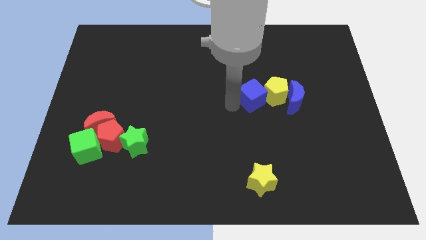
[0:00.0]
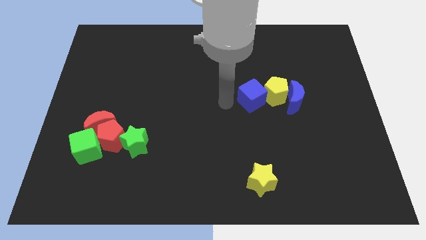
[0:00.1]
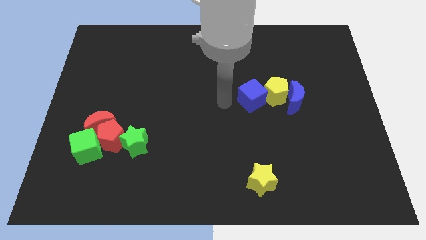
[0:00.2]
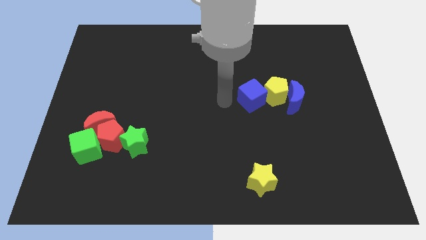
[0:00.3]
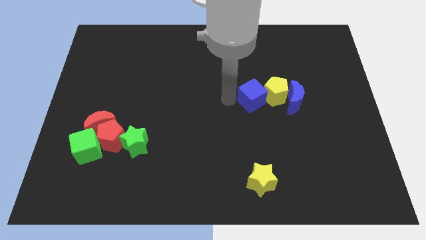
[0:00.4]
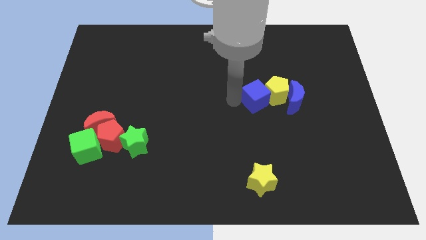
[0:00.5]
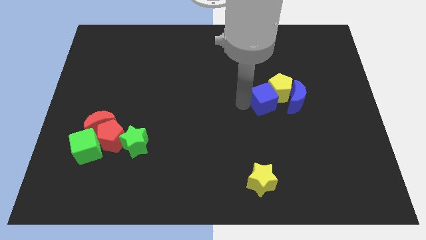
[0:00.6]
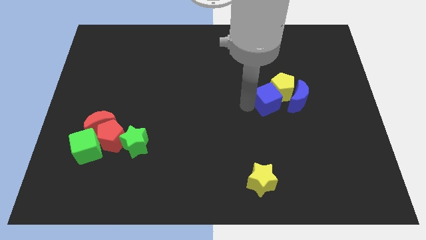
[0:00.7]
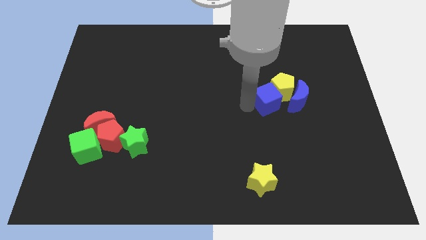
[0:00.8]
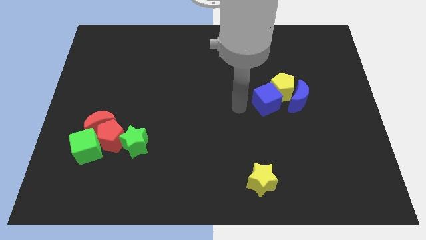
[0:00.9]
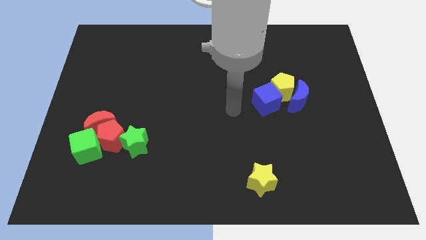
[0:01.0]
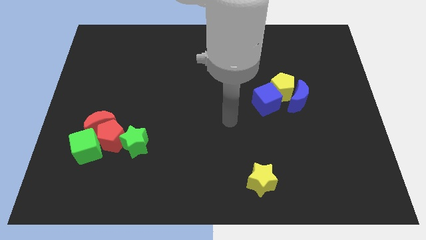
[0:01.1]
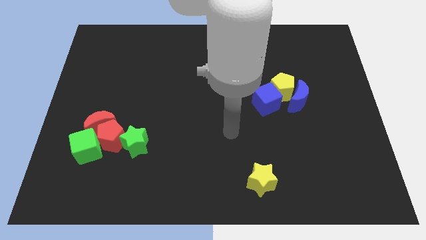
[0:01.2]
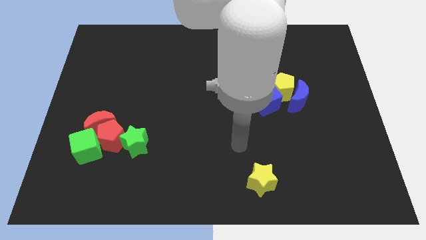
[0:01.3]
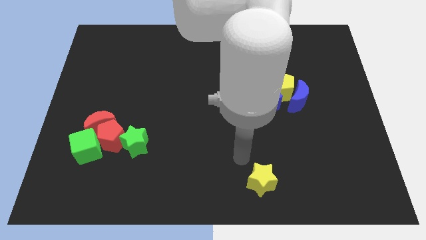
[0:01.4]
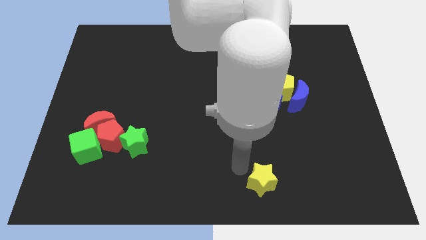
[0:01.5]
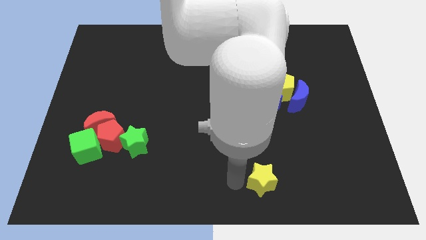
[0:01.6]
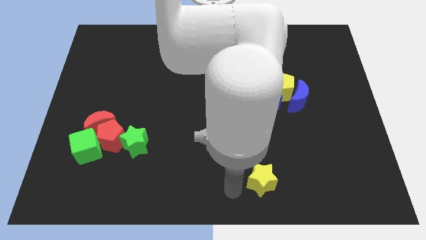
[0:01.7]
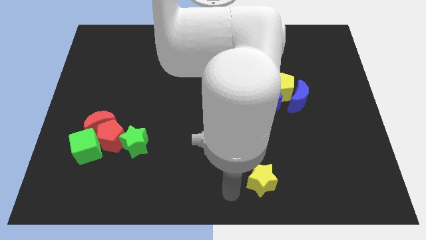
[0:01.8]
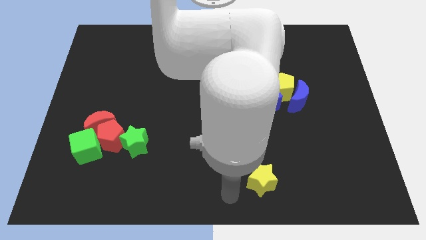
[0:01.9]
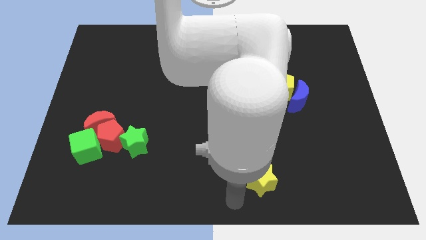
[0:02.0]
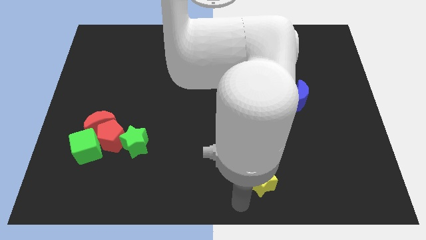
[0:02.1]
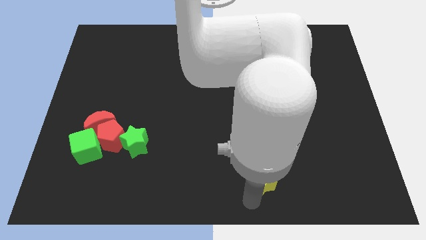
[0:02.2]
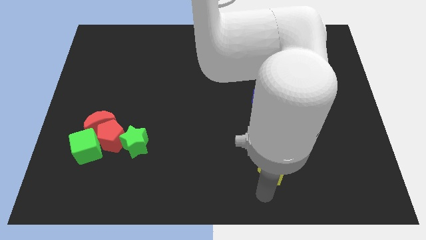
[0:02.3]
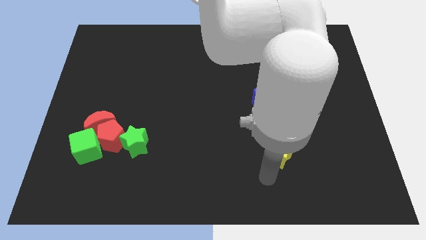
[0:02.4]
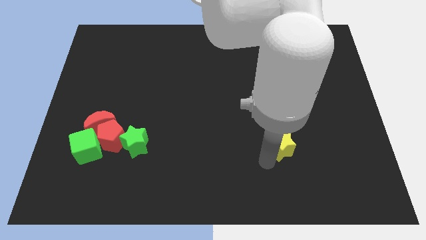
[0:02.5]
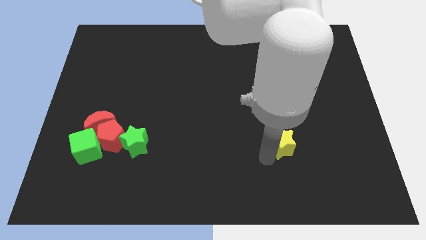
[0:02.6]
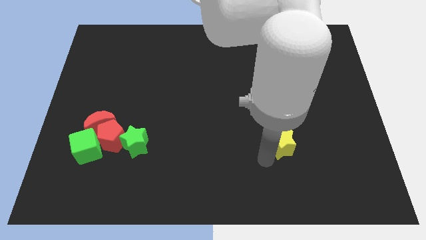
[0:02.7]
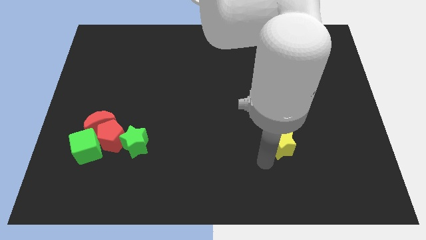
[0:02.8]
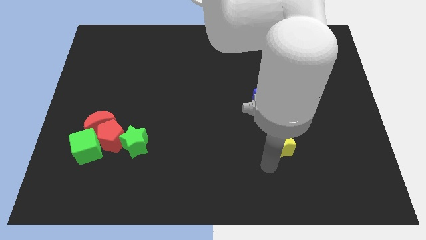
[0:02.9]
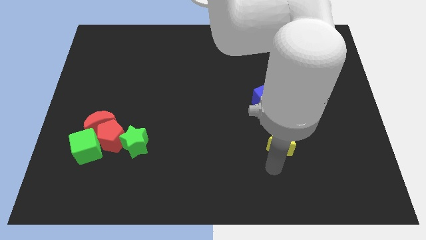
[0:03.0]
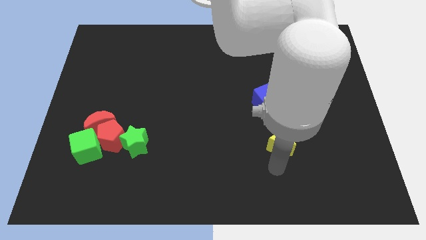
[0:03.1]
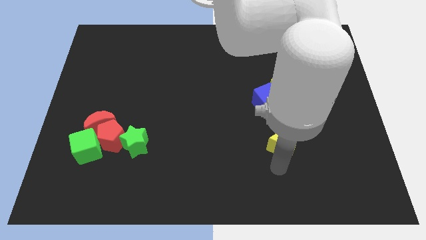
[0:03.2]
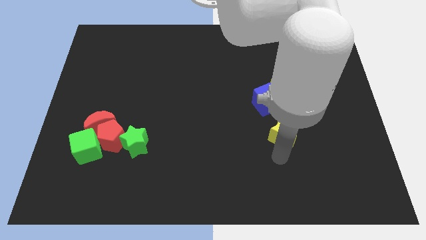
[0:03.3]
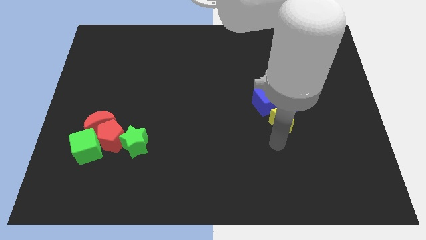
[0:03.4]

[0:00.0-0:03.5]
move the yellow star towards the top side of the blocks

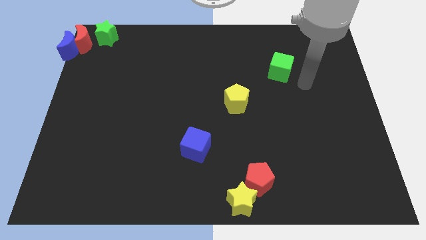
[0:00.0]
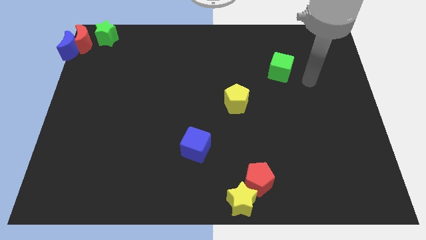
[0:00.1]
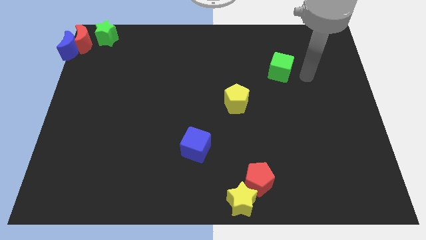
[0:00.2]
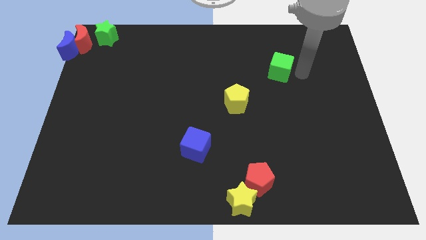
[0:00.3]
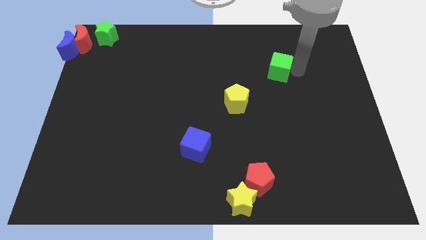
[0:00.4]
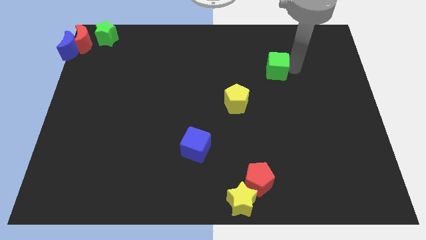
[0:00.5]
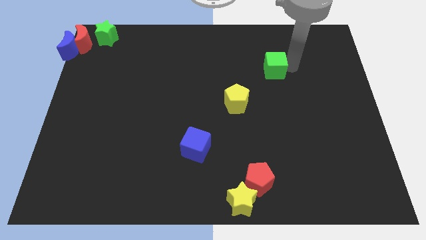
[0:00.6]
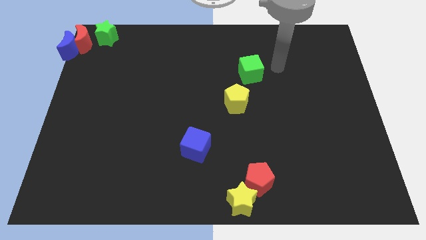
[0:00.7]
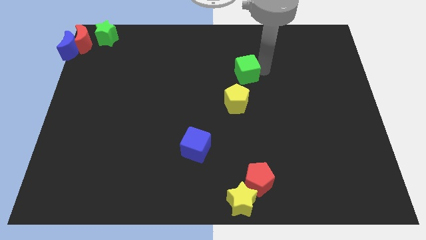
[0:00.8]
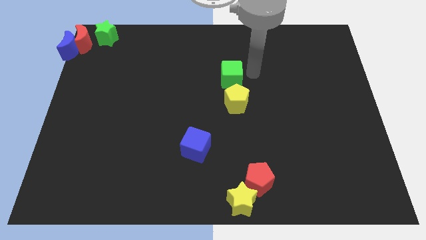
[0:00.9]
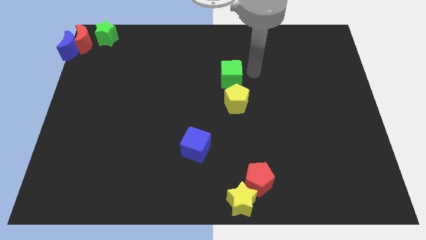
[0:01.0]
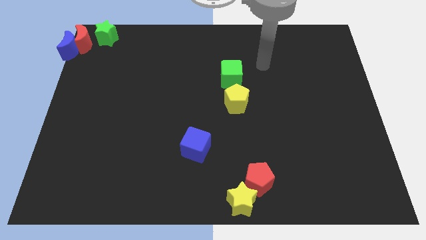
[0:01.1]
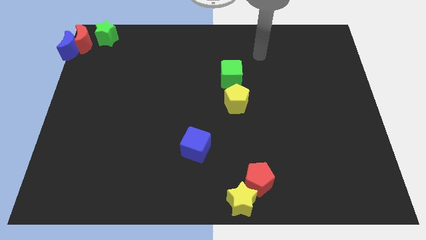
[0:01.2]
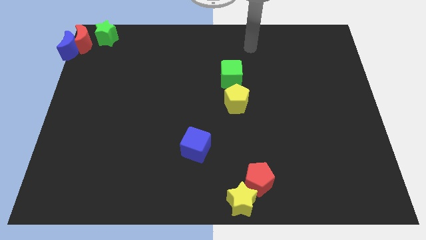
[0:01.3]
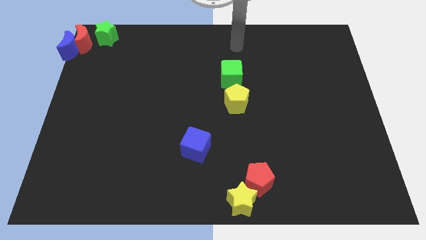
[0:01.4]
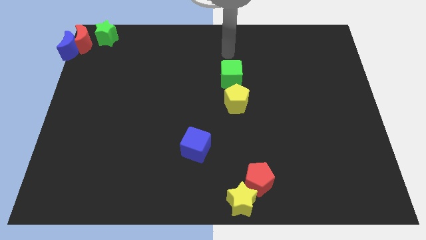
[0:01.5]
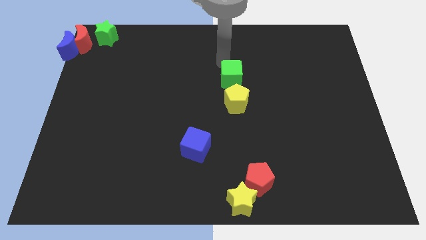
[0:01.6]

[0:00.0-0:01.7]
put the green cube to the top side of the yellow pentagon

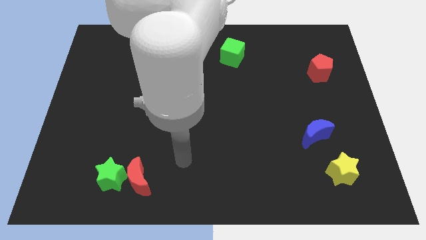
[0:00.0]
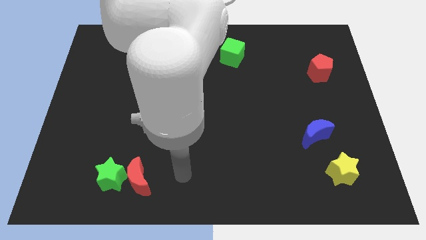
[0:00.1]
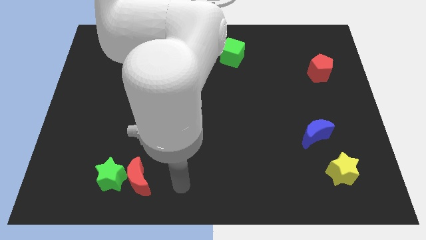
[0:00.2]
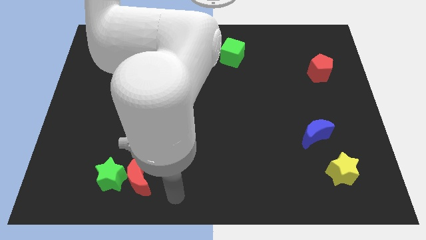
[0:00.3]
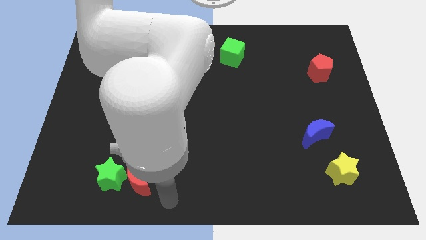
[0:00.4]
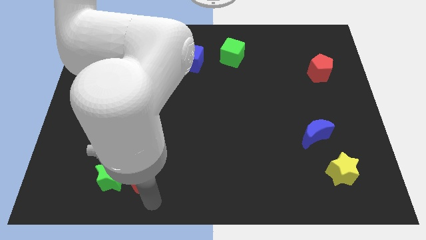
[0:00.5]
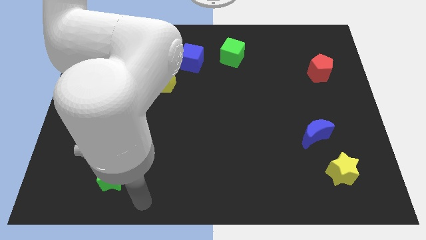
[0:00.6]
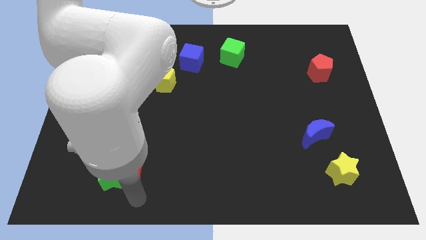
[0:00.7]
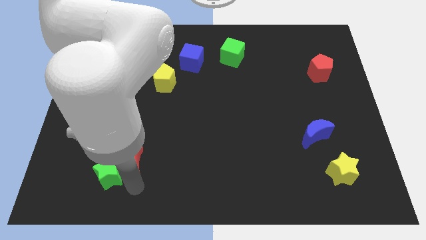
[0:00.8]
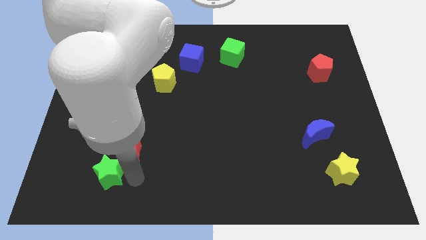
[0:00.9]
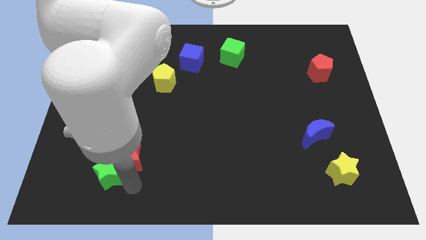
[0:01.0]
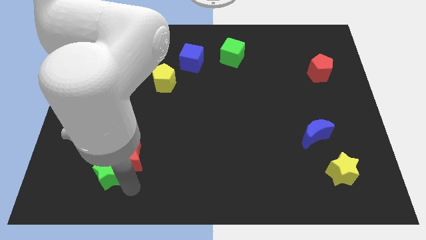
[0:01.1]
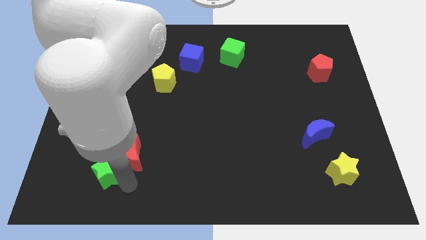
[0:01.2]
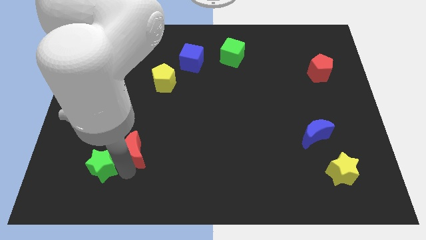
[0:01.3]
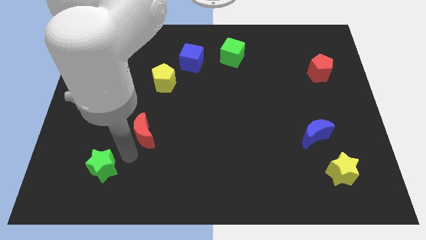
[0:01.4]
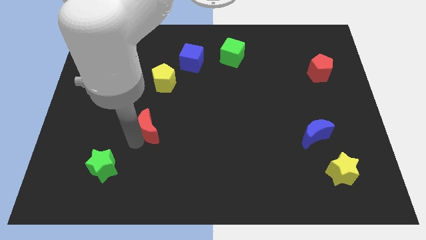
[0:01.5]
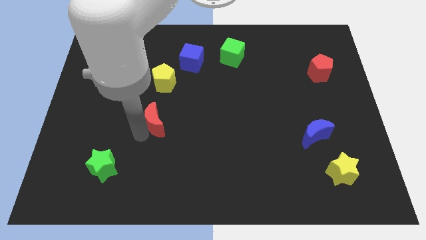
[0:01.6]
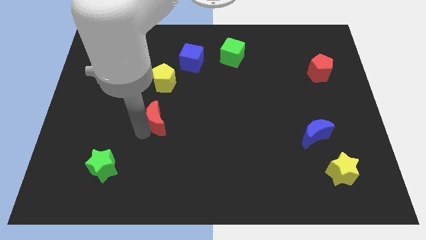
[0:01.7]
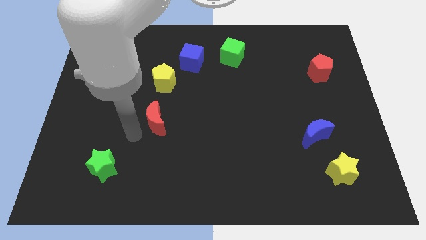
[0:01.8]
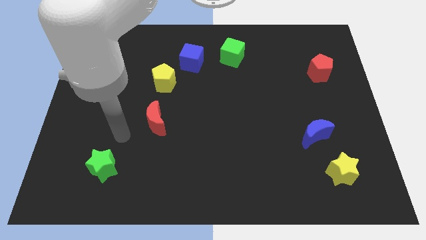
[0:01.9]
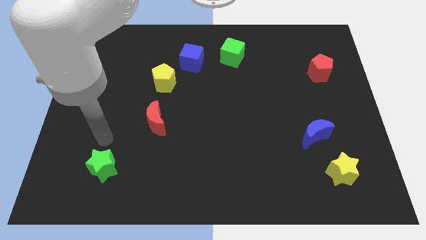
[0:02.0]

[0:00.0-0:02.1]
separate the red crescent from the green star

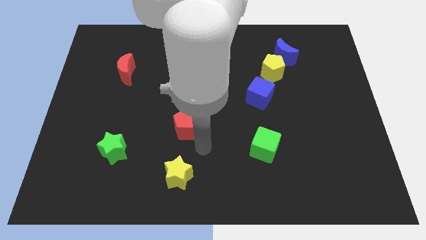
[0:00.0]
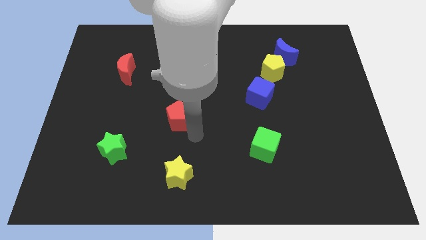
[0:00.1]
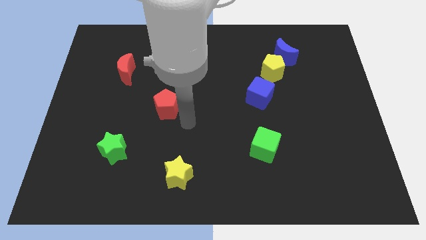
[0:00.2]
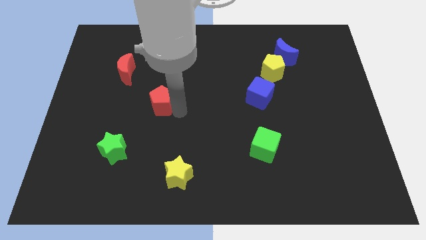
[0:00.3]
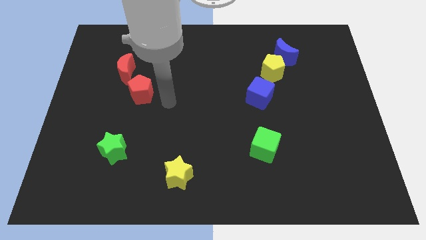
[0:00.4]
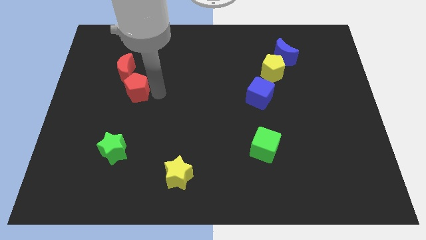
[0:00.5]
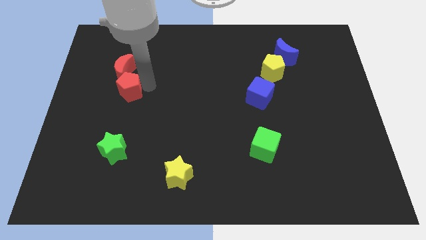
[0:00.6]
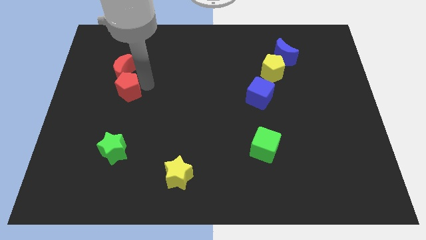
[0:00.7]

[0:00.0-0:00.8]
push the red pentagon above the green star

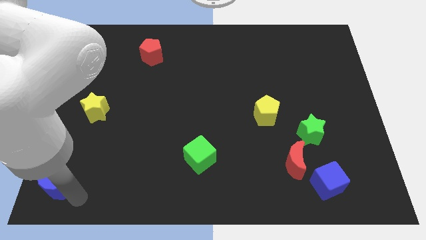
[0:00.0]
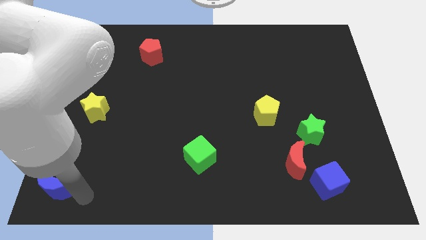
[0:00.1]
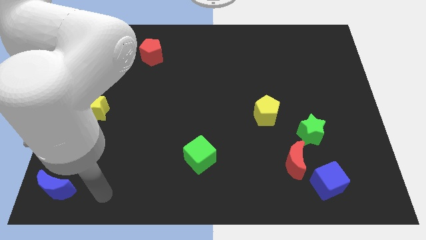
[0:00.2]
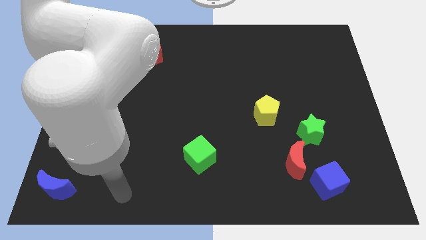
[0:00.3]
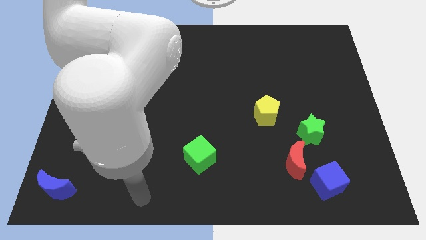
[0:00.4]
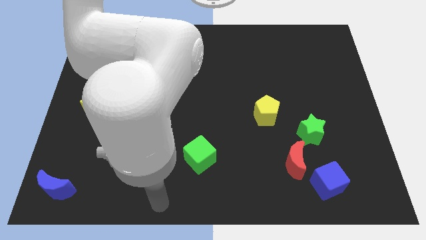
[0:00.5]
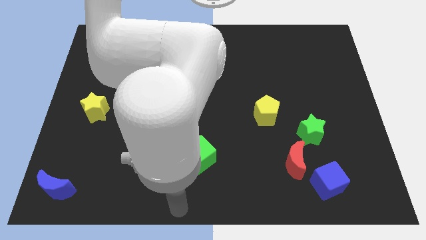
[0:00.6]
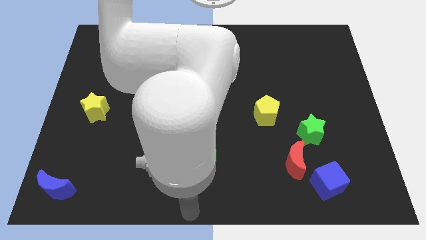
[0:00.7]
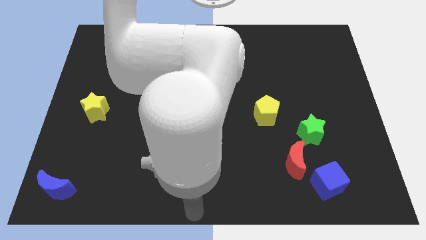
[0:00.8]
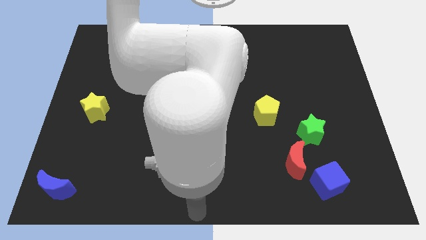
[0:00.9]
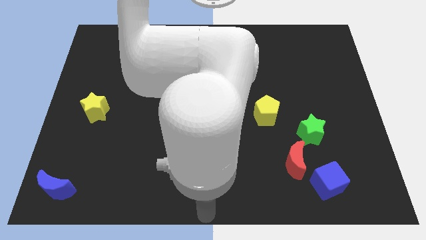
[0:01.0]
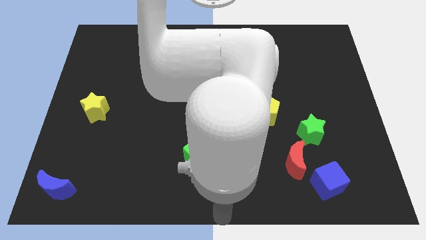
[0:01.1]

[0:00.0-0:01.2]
put your arm at the bottom center of the board
